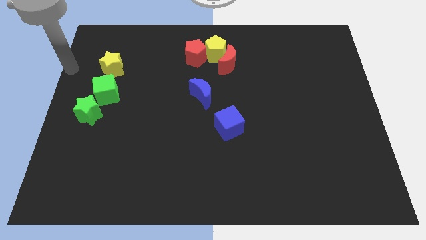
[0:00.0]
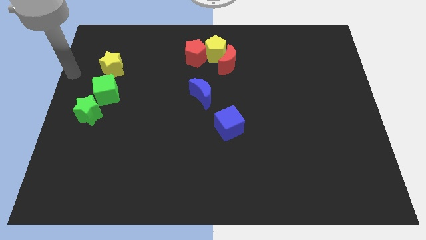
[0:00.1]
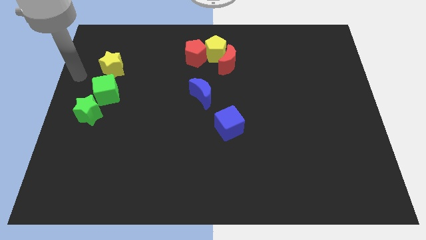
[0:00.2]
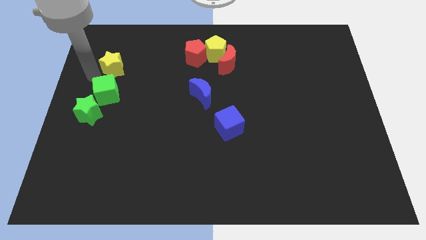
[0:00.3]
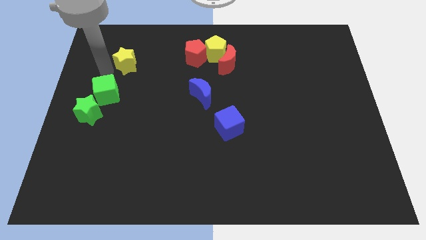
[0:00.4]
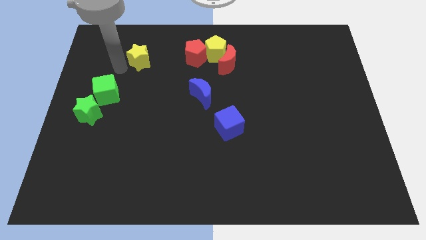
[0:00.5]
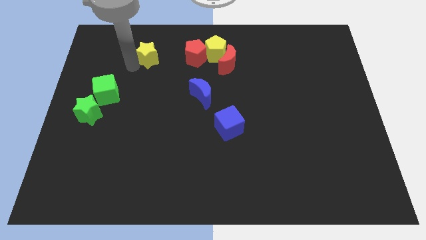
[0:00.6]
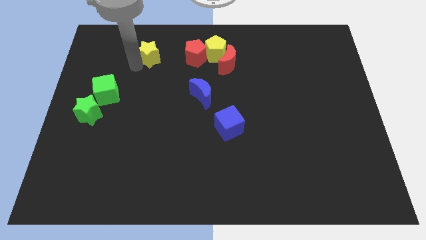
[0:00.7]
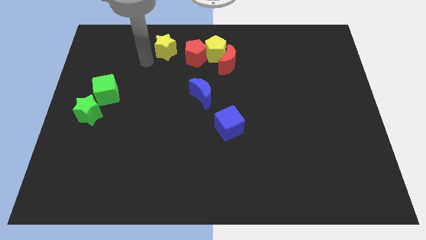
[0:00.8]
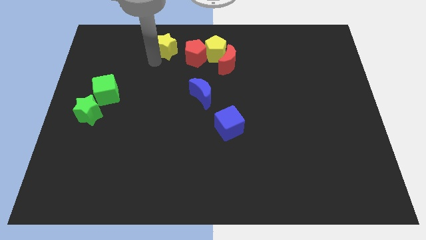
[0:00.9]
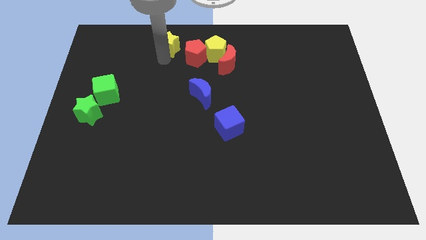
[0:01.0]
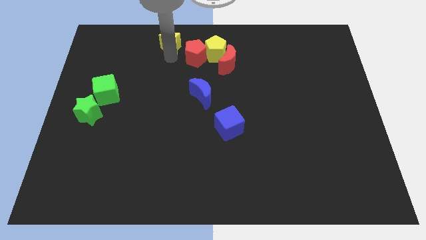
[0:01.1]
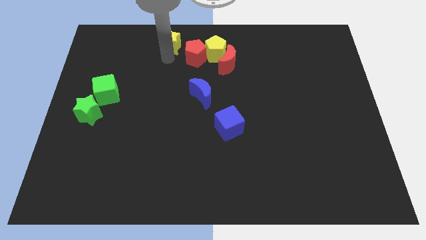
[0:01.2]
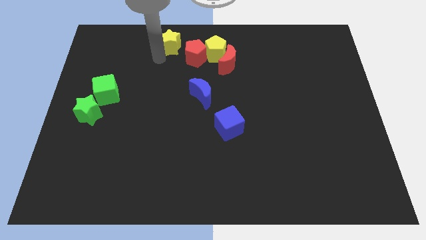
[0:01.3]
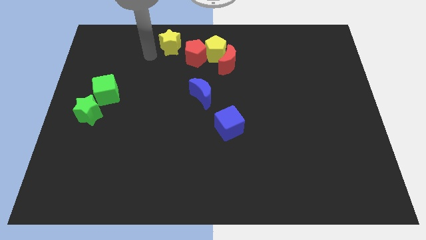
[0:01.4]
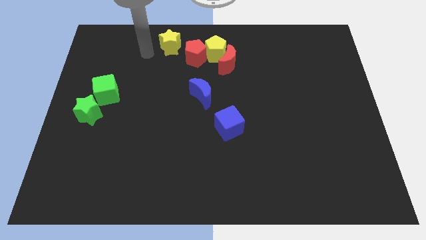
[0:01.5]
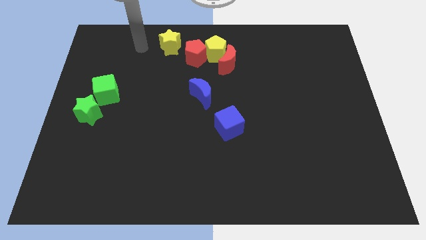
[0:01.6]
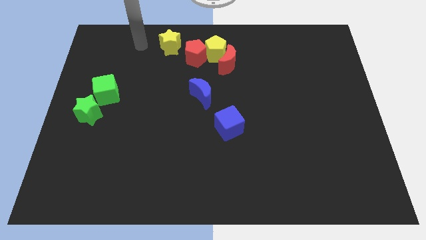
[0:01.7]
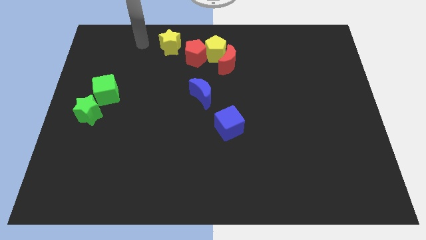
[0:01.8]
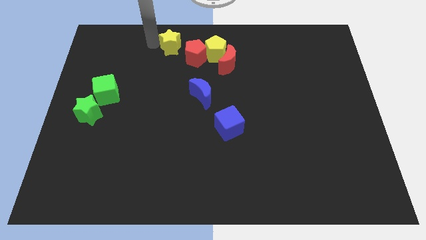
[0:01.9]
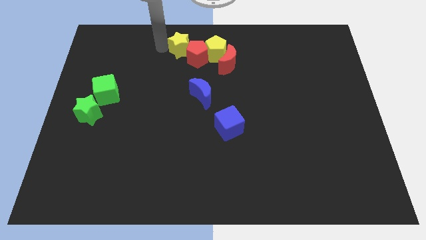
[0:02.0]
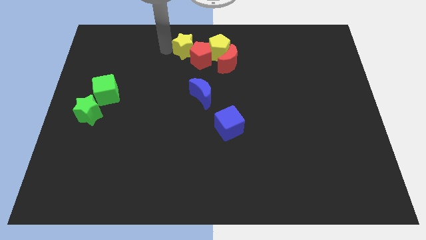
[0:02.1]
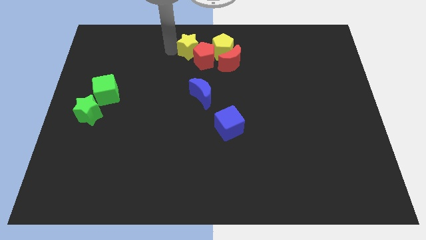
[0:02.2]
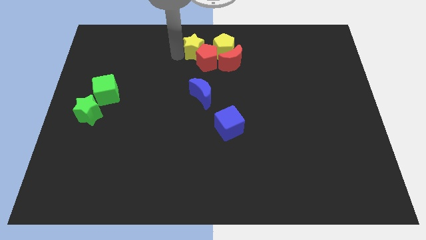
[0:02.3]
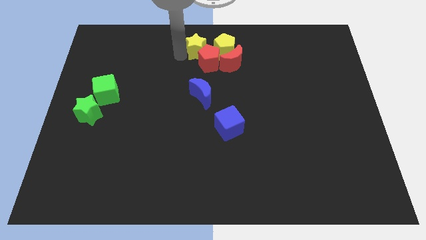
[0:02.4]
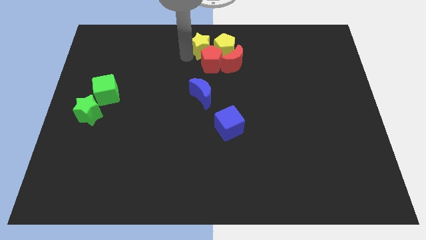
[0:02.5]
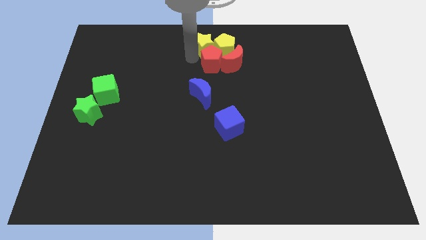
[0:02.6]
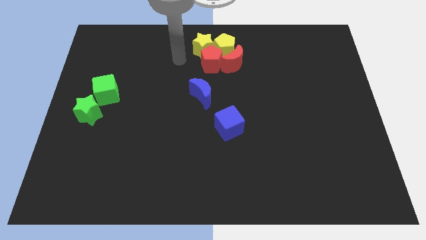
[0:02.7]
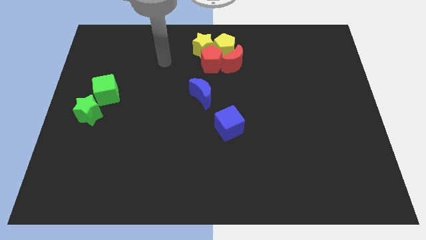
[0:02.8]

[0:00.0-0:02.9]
move yellow star into the red pentagon

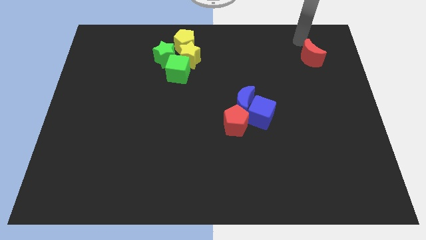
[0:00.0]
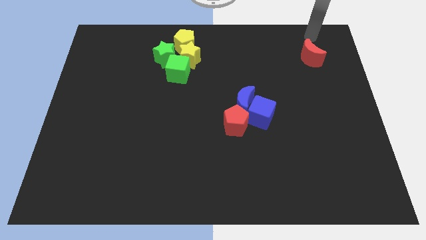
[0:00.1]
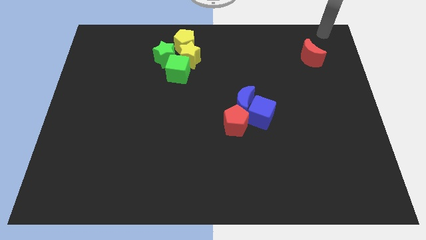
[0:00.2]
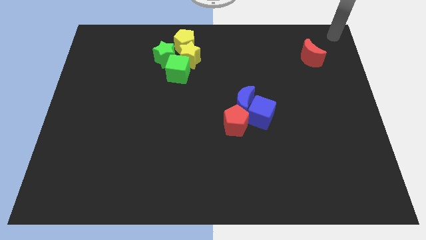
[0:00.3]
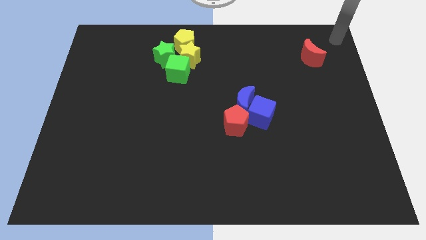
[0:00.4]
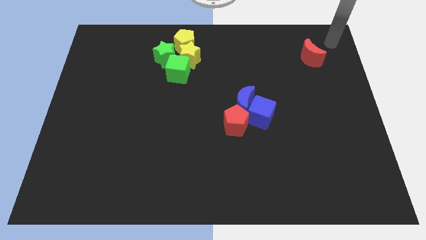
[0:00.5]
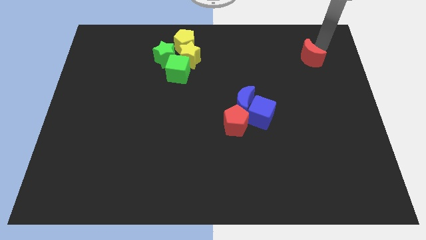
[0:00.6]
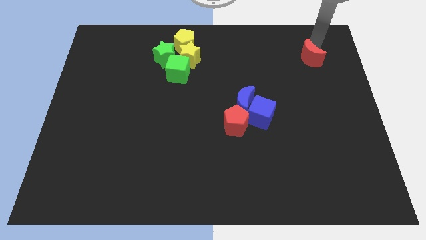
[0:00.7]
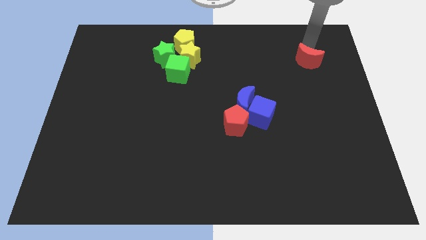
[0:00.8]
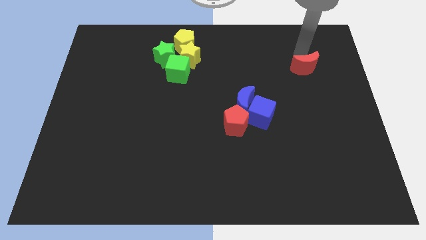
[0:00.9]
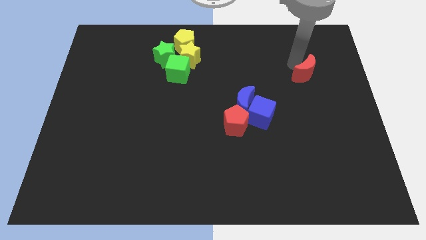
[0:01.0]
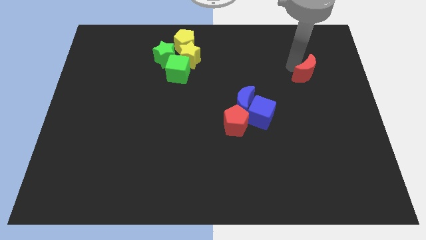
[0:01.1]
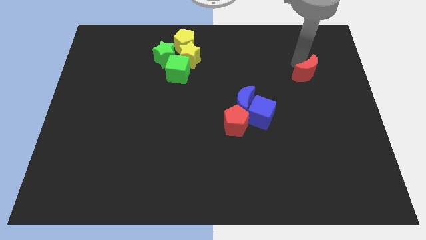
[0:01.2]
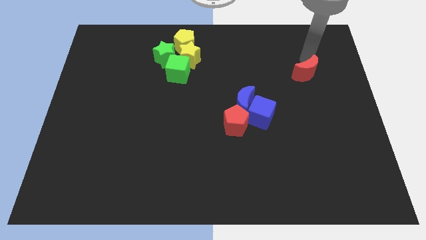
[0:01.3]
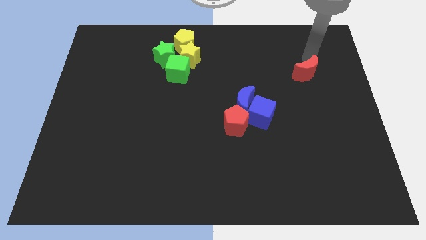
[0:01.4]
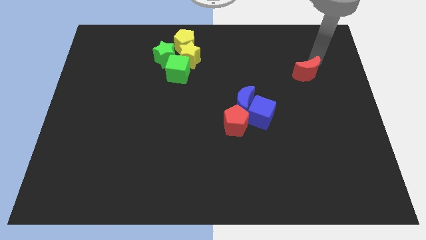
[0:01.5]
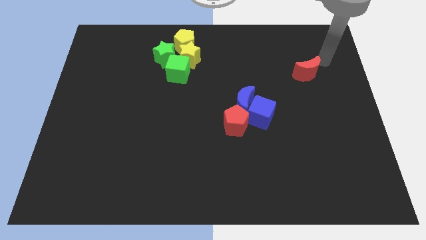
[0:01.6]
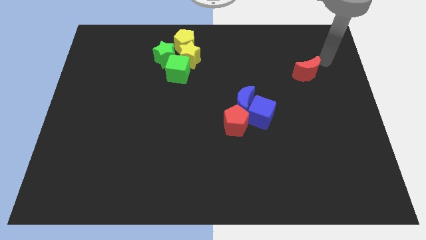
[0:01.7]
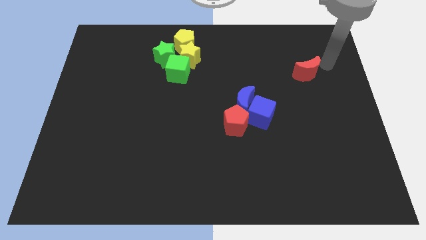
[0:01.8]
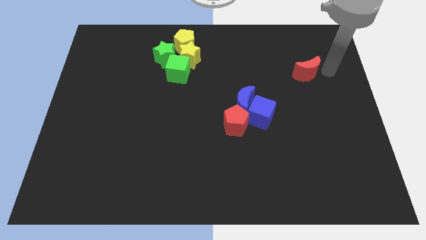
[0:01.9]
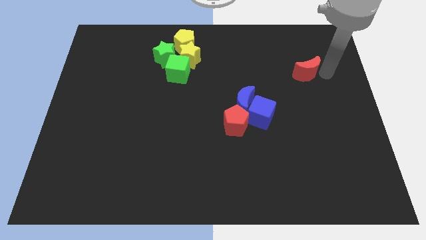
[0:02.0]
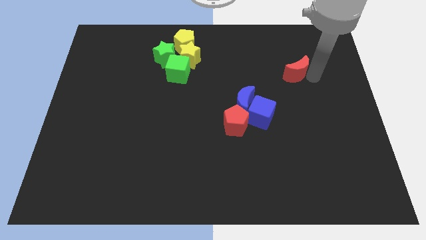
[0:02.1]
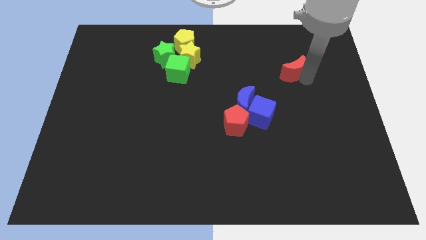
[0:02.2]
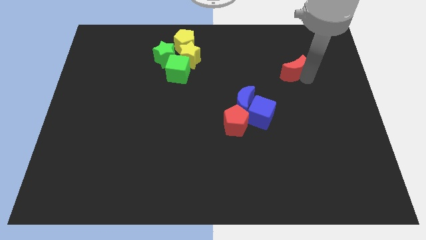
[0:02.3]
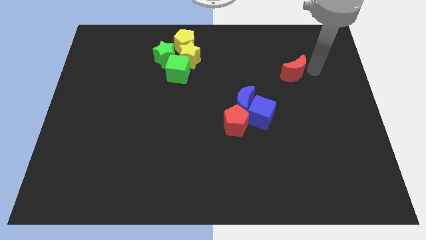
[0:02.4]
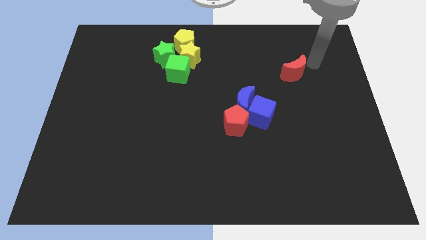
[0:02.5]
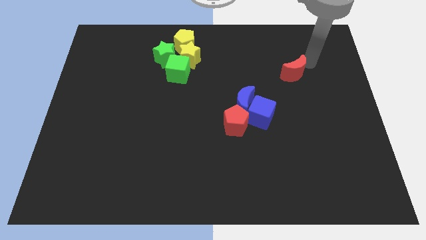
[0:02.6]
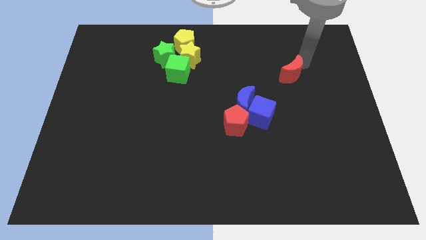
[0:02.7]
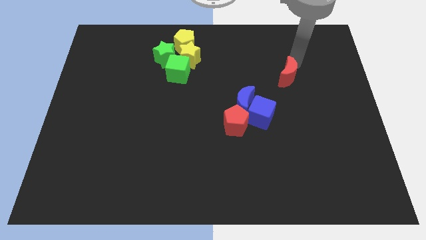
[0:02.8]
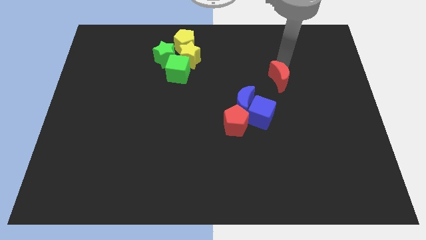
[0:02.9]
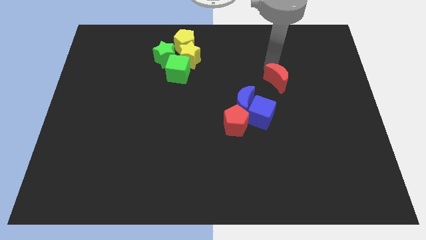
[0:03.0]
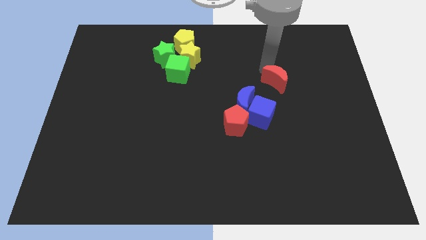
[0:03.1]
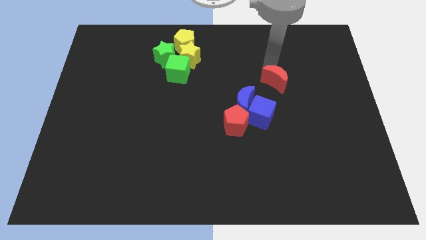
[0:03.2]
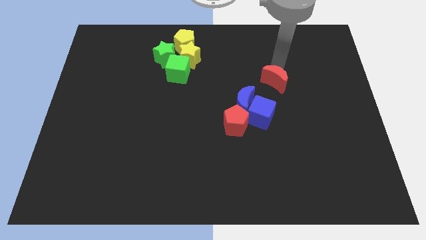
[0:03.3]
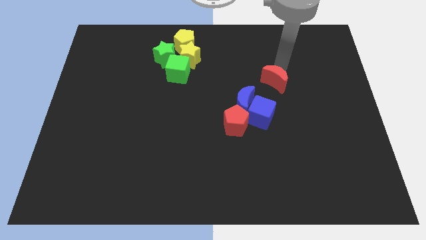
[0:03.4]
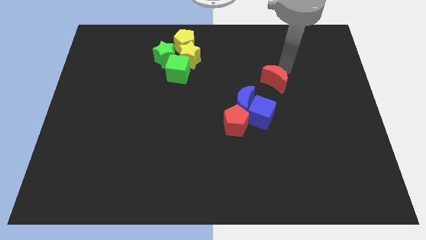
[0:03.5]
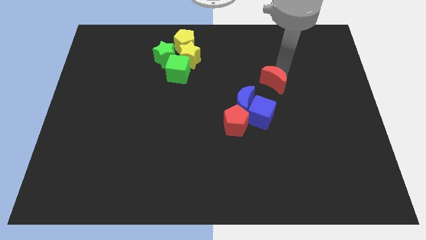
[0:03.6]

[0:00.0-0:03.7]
push the red crescent towards the blue crescent

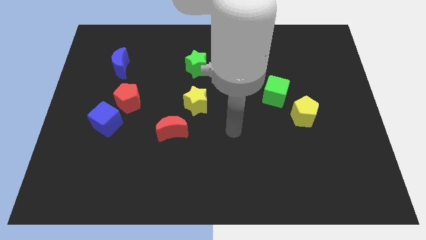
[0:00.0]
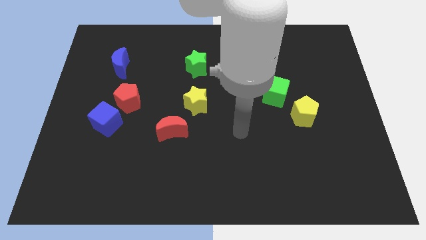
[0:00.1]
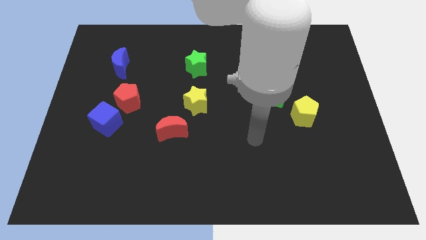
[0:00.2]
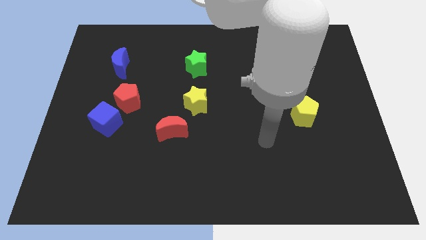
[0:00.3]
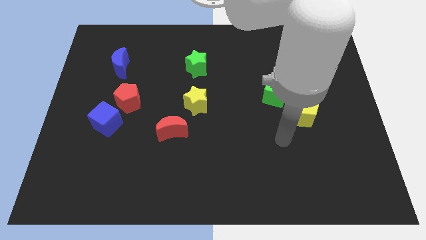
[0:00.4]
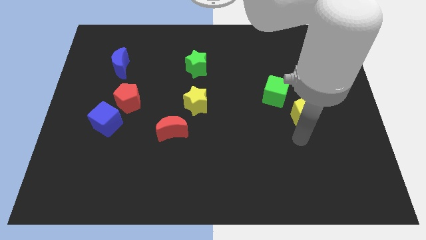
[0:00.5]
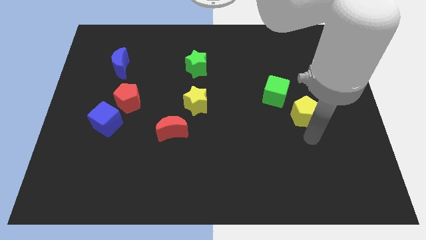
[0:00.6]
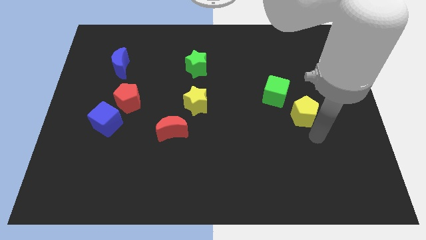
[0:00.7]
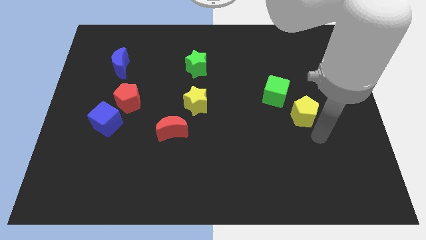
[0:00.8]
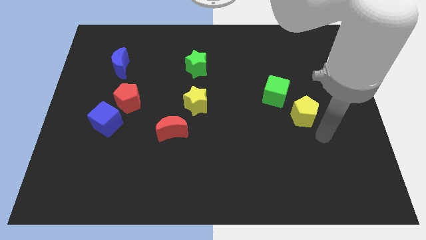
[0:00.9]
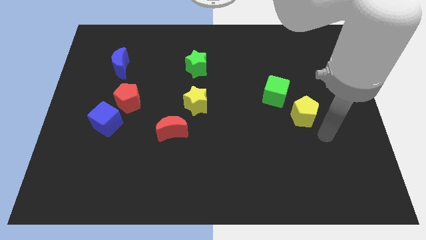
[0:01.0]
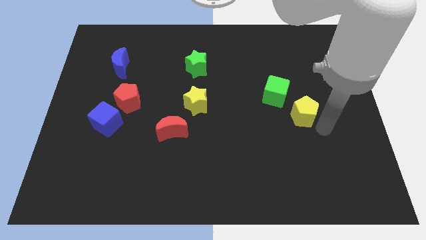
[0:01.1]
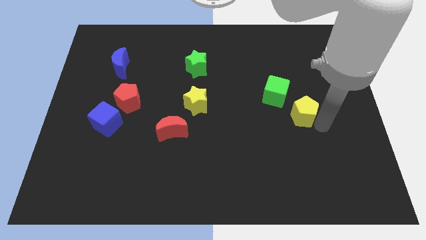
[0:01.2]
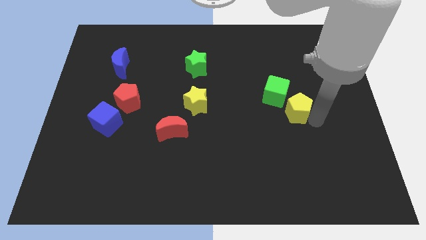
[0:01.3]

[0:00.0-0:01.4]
go and touch the yellow pentagon

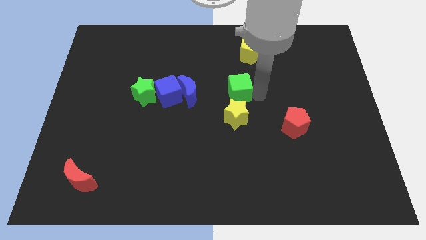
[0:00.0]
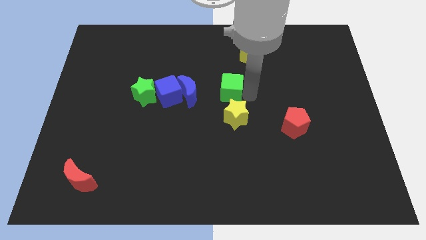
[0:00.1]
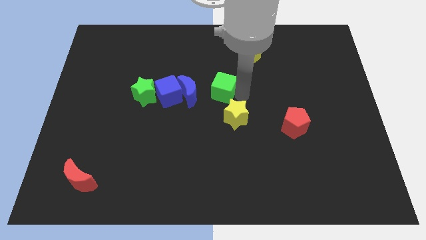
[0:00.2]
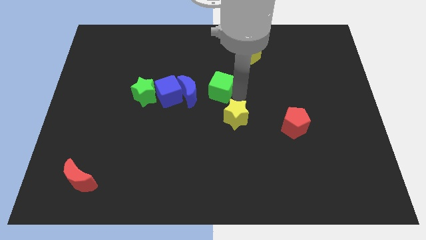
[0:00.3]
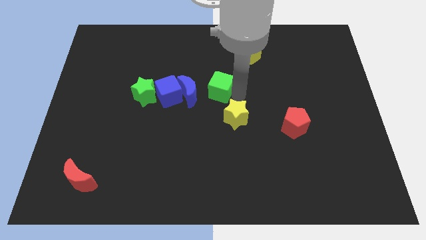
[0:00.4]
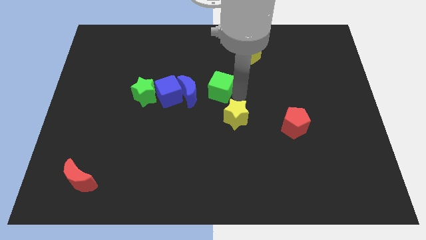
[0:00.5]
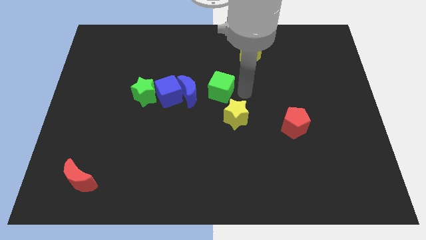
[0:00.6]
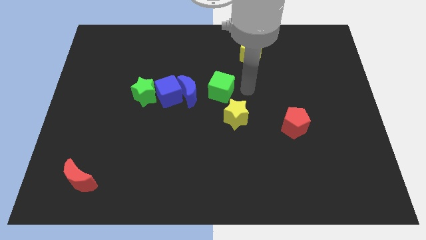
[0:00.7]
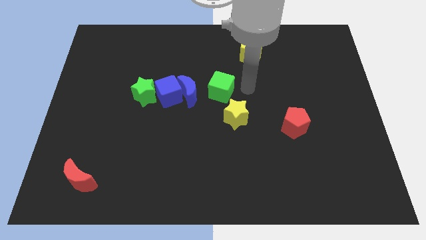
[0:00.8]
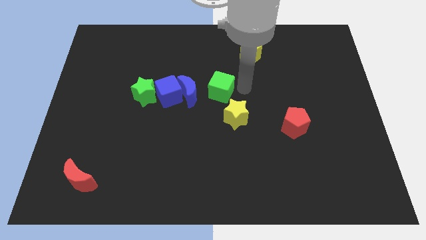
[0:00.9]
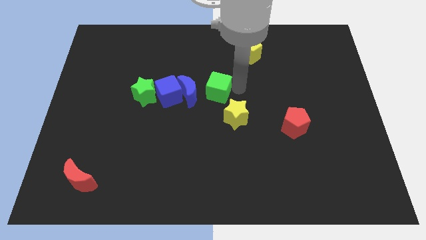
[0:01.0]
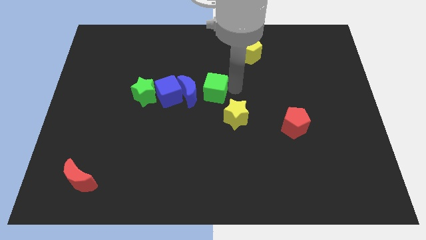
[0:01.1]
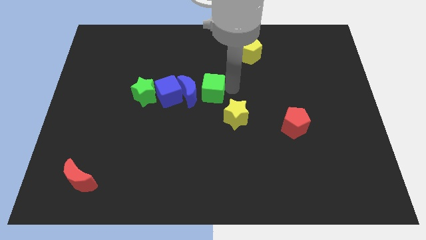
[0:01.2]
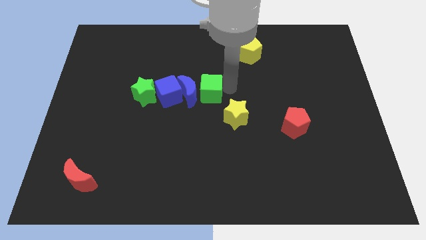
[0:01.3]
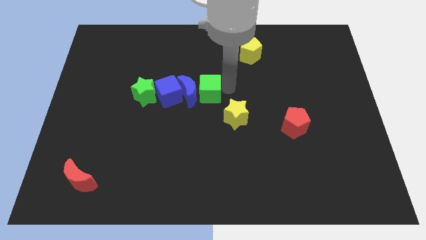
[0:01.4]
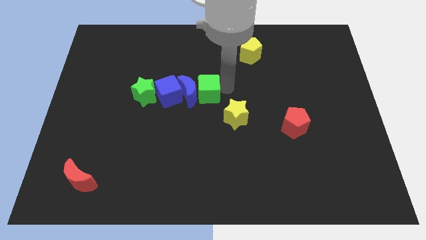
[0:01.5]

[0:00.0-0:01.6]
place the green cube to the right of the blue moon to form a horizontal line
